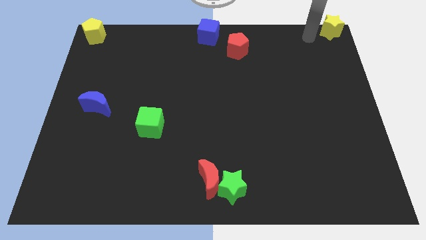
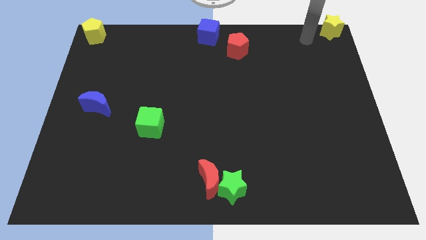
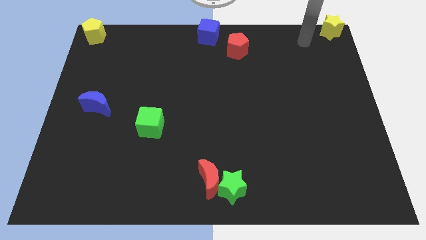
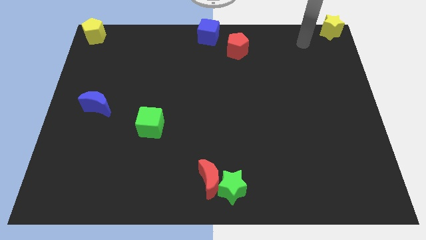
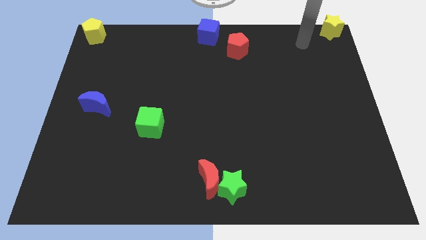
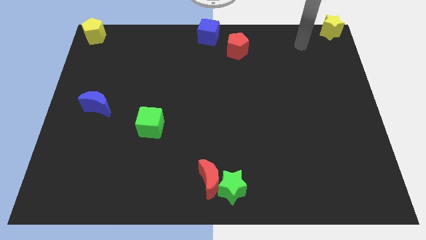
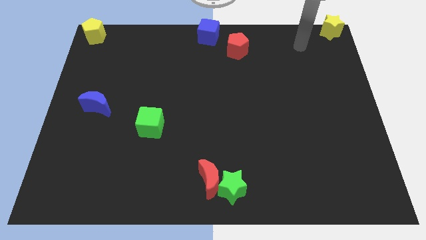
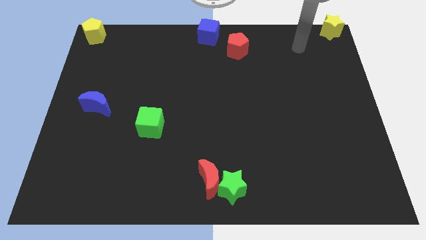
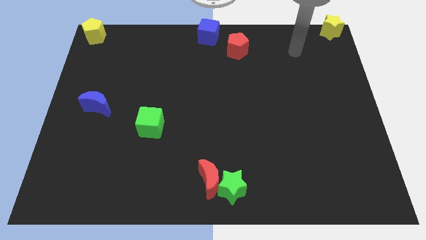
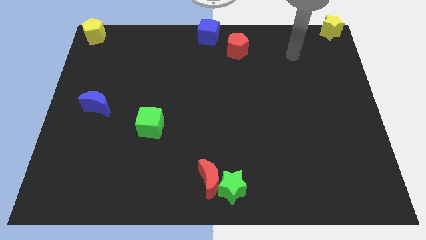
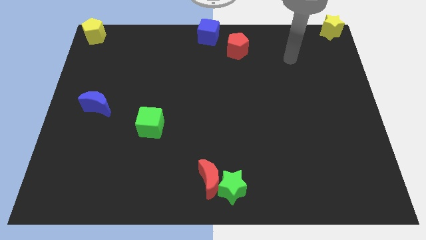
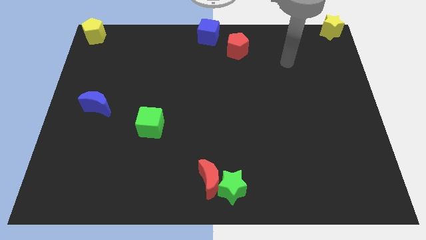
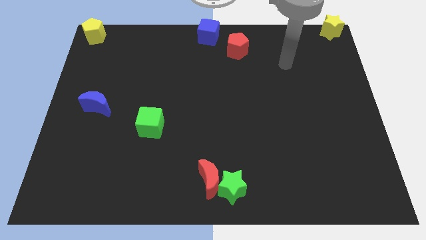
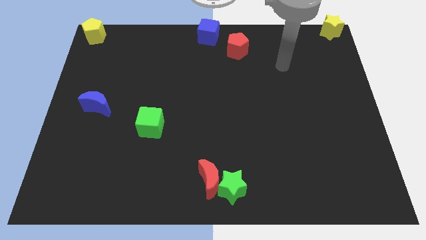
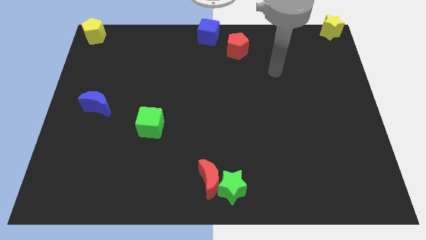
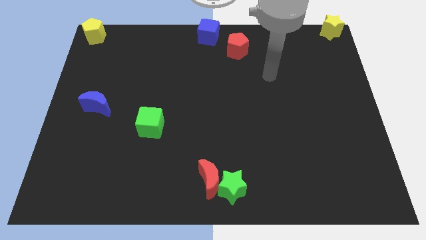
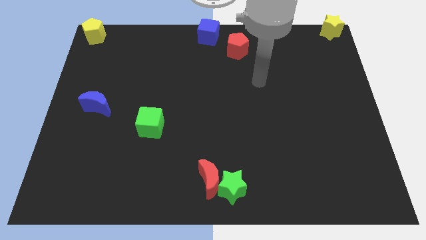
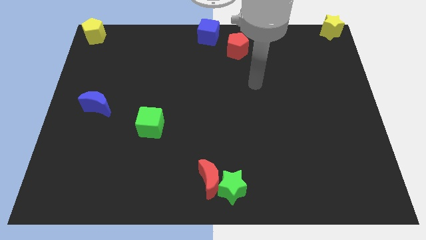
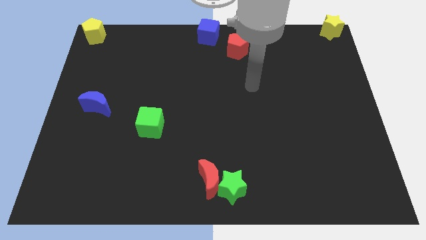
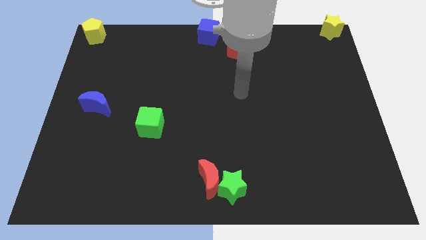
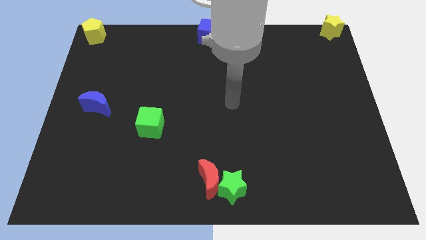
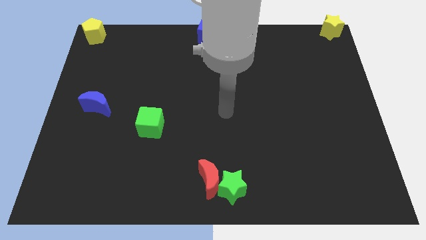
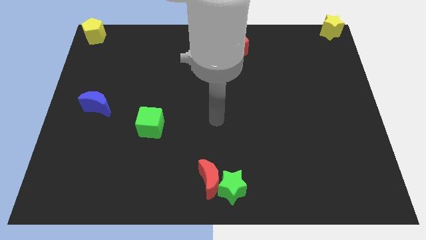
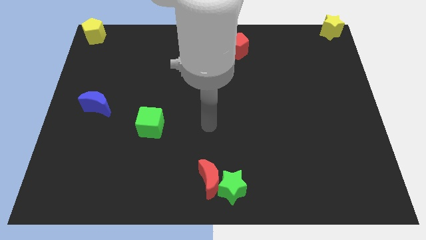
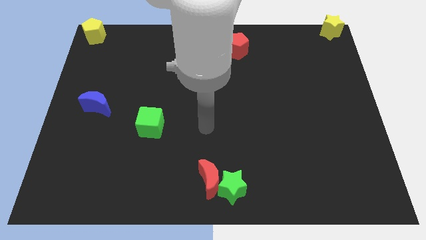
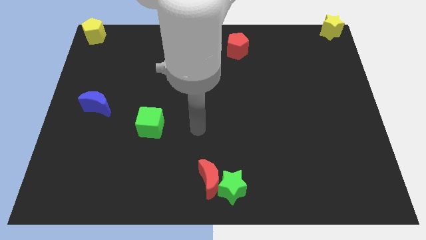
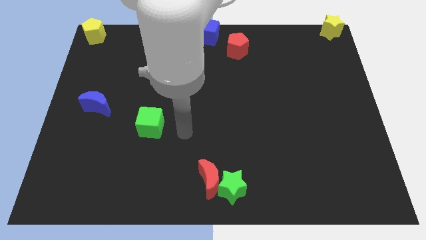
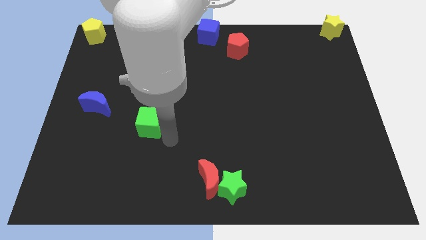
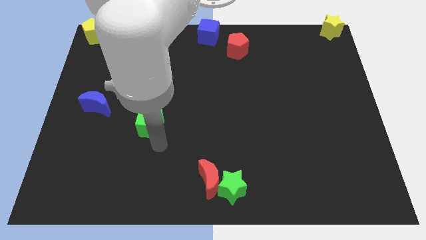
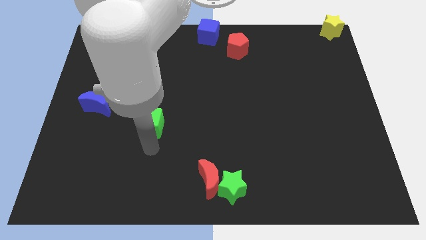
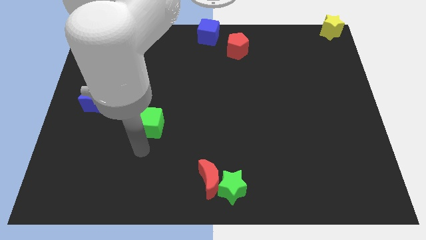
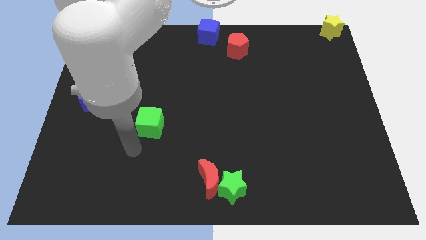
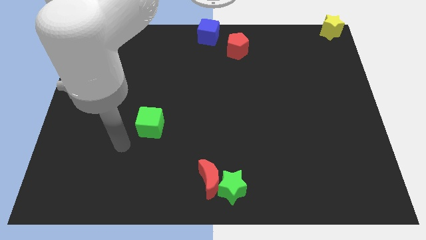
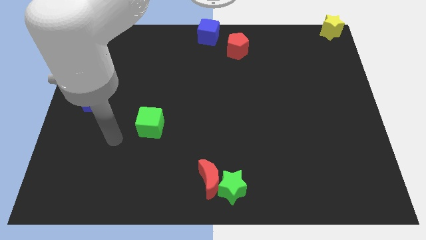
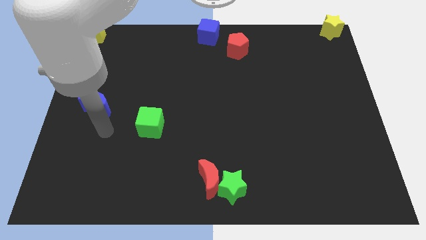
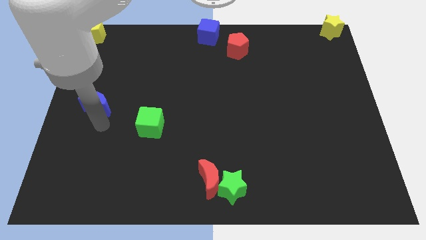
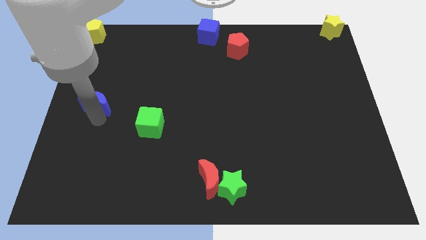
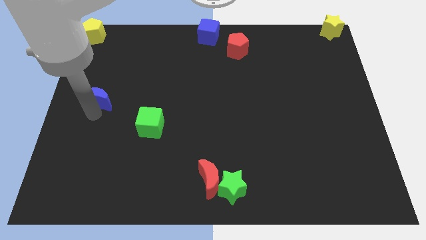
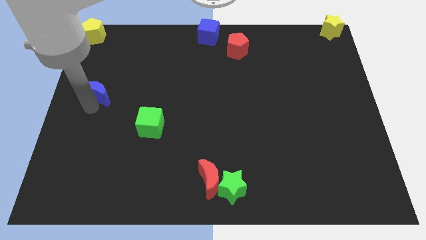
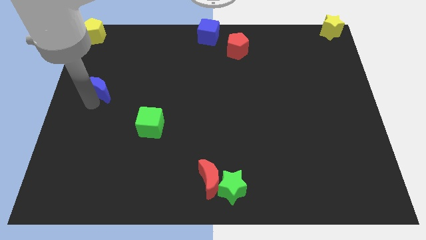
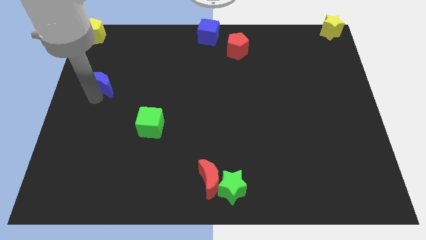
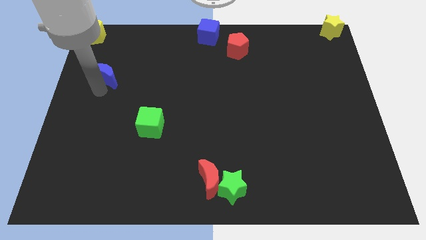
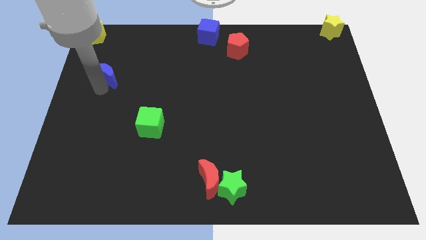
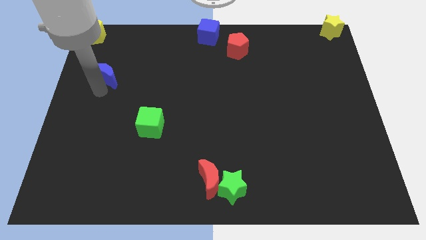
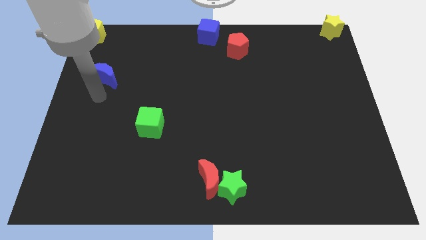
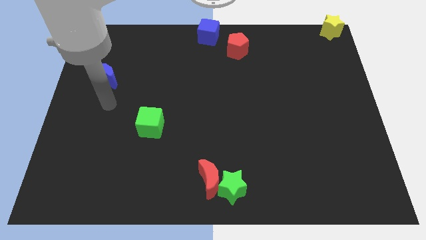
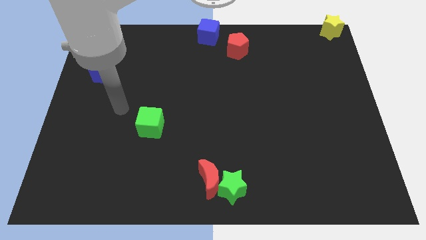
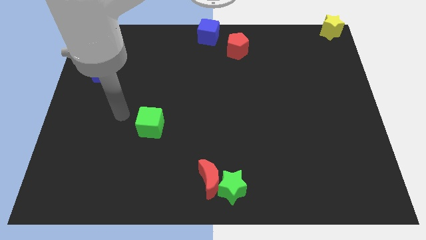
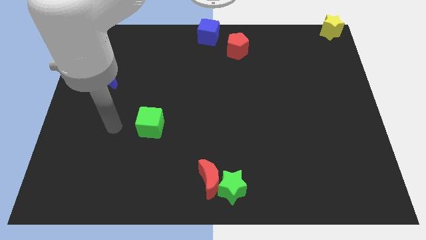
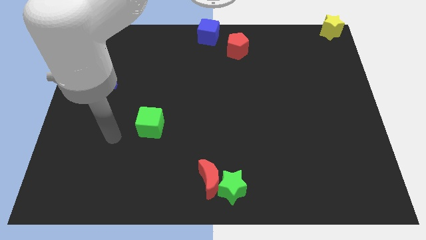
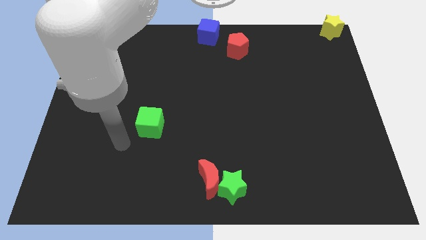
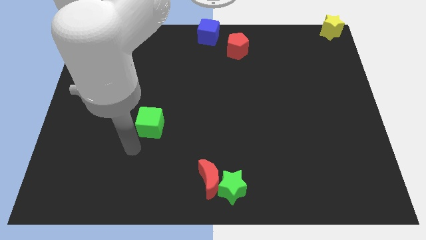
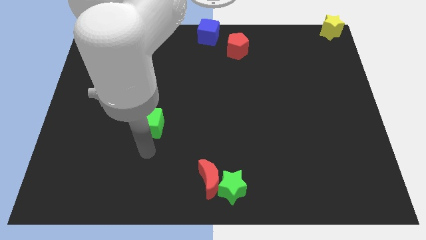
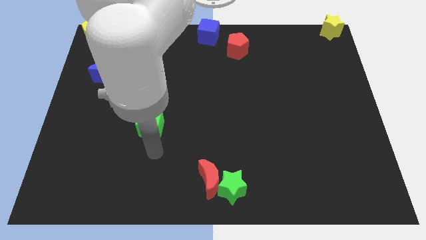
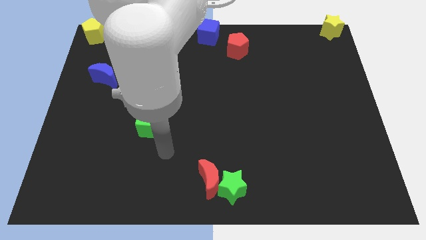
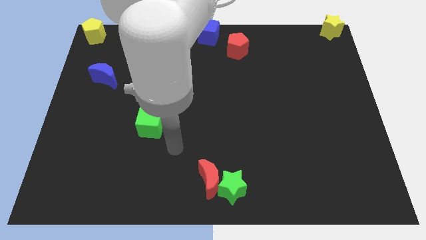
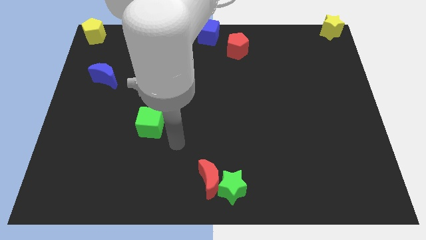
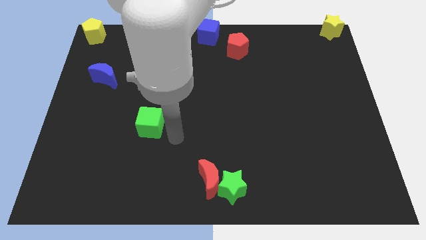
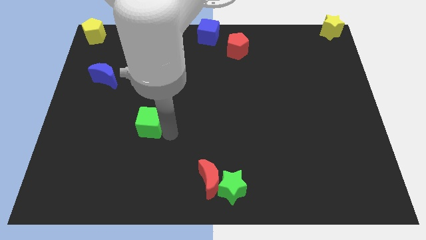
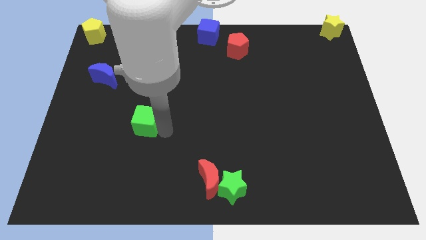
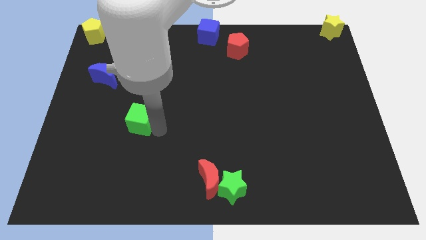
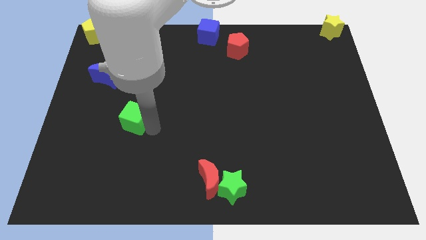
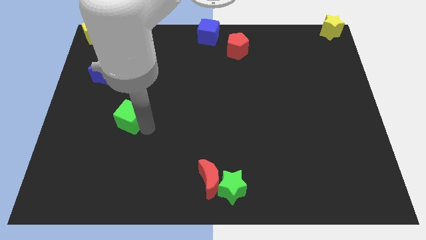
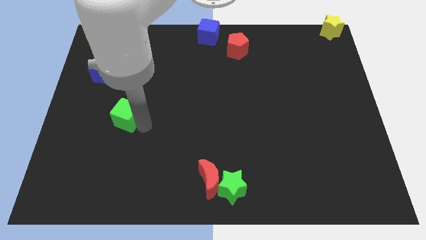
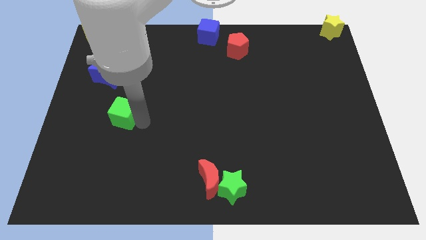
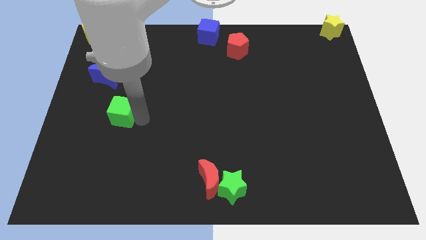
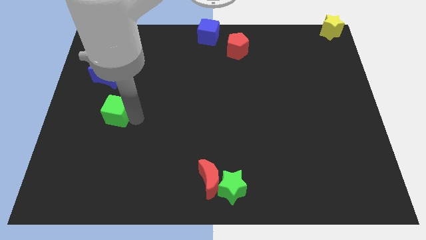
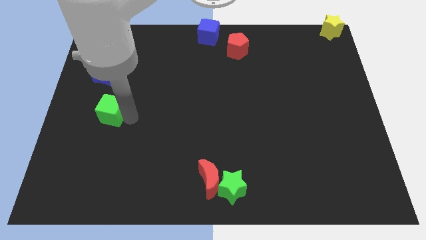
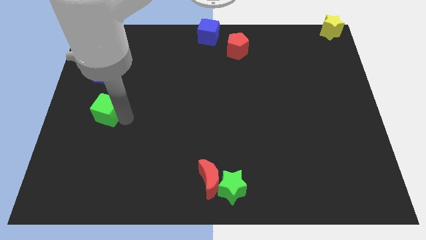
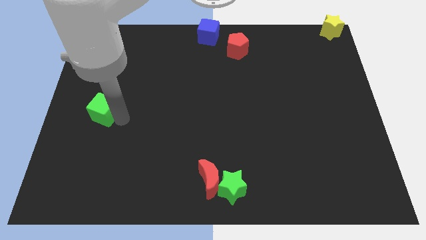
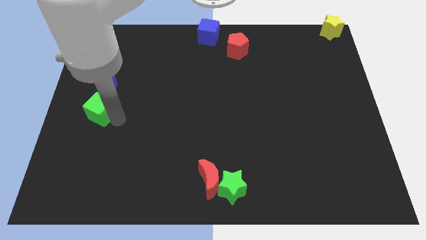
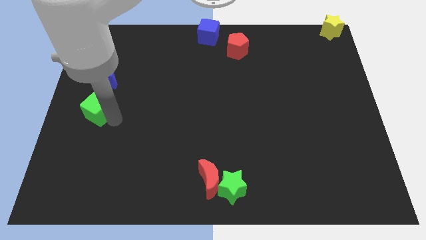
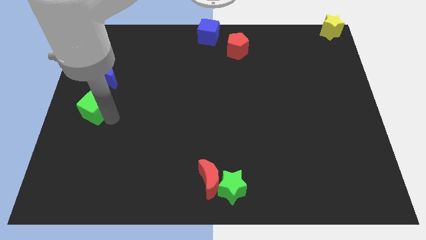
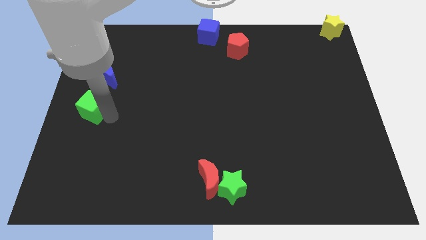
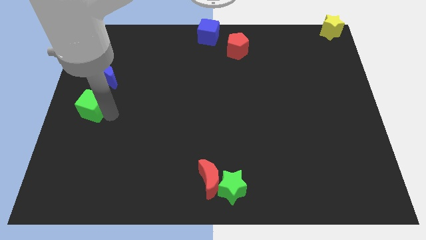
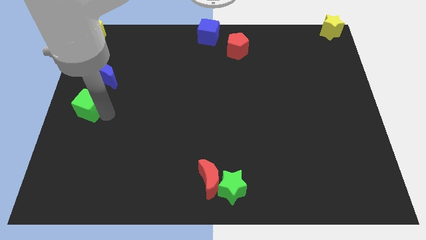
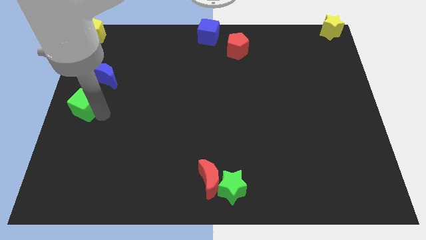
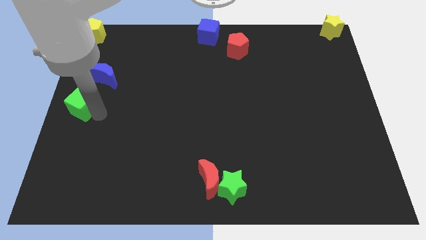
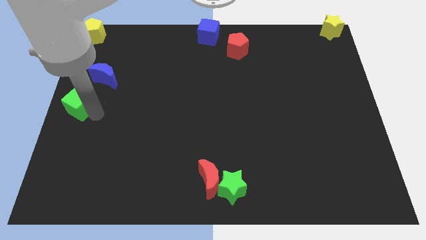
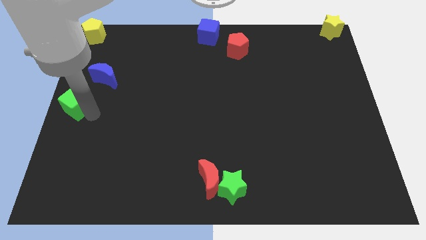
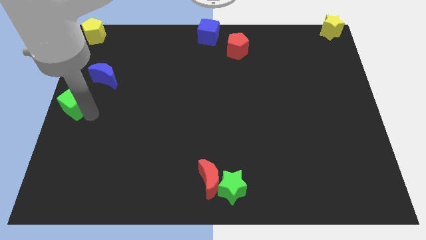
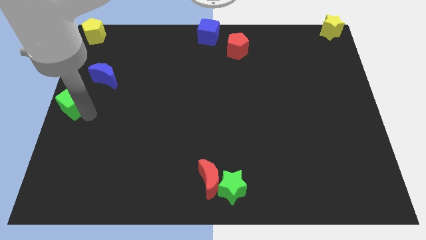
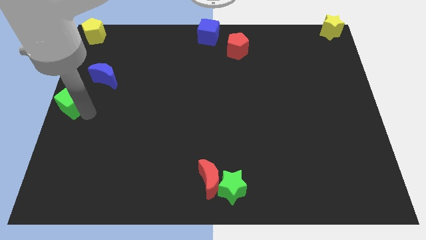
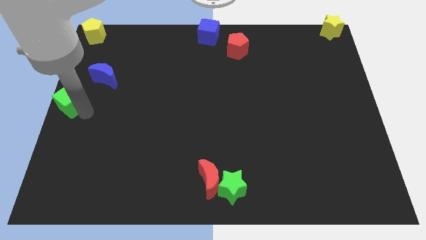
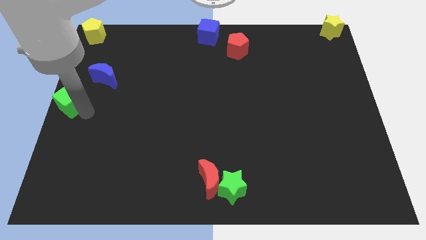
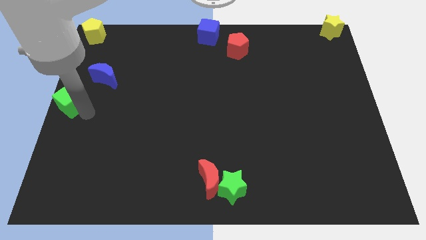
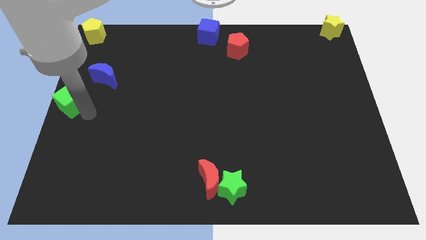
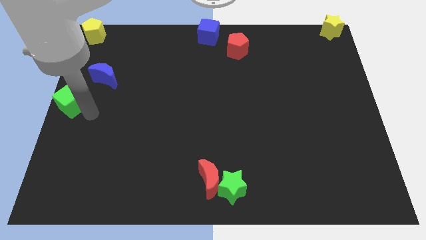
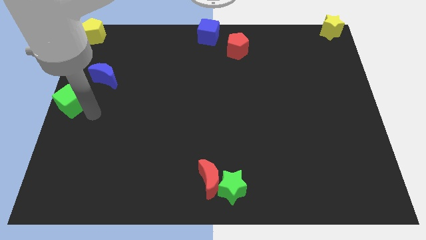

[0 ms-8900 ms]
place the green cube towards the left center of the board

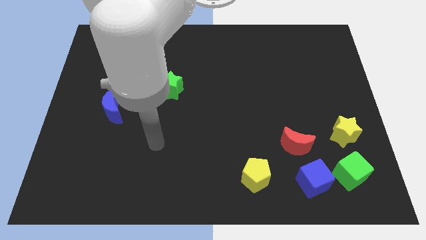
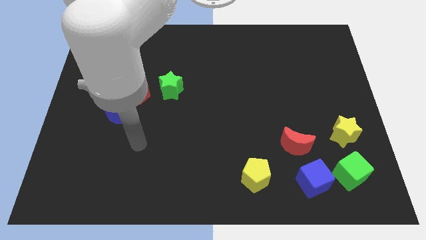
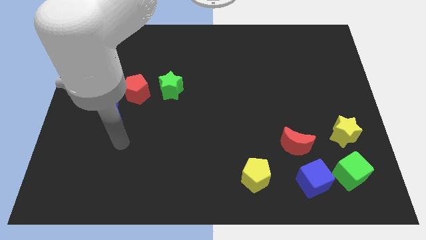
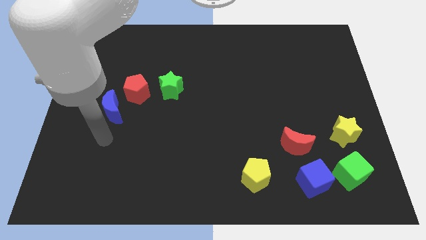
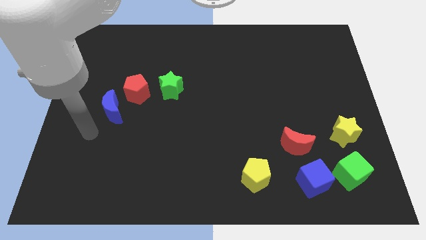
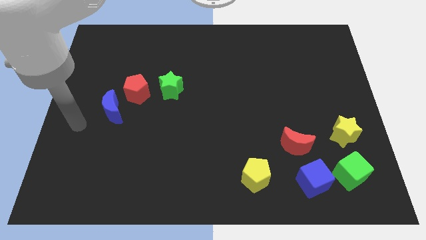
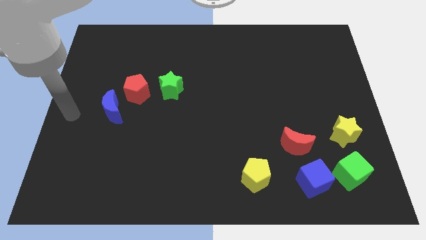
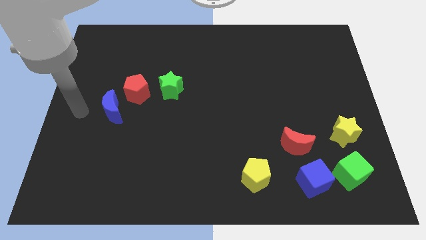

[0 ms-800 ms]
place your arm at the left of the blue crescent
